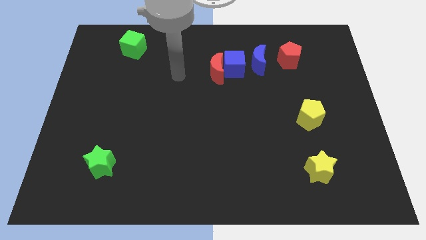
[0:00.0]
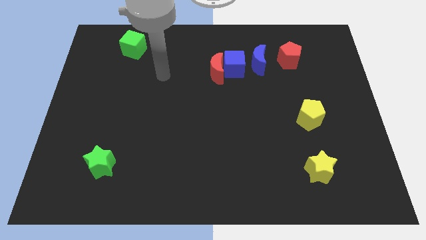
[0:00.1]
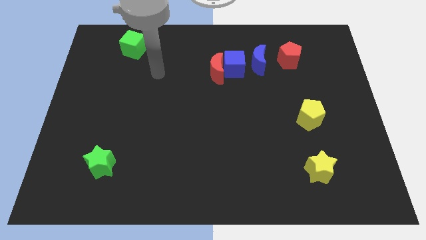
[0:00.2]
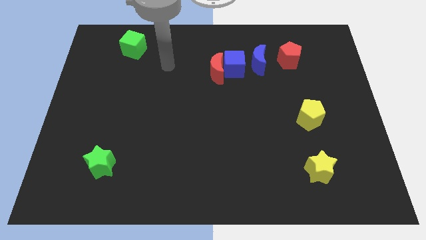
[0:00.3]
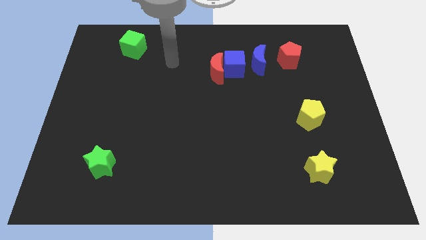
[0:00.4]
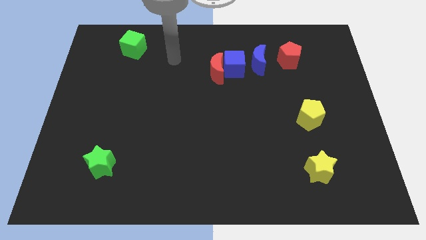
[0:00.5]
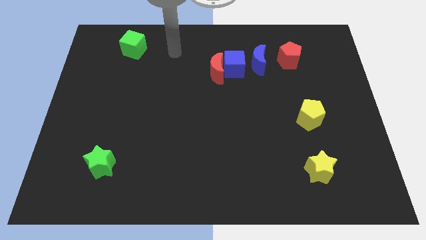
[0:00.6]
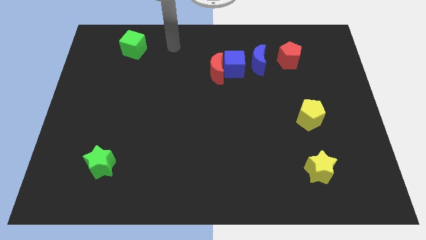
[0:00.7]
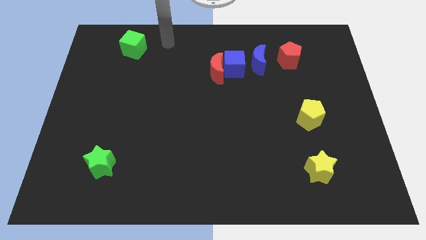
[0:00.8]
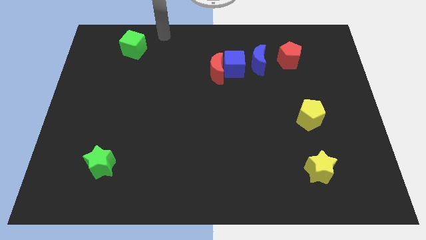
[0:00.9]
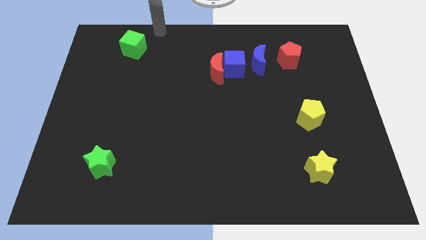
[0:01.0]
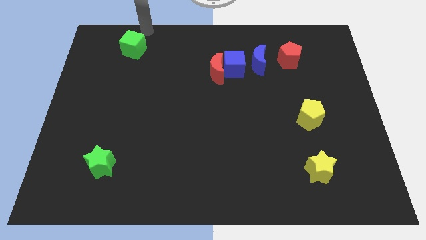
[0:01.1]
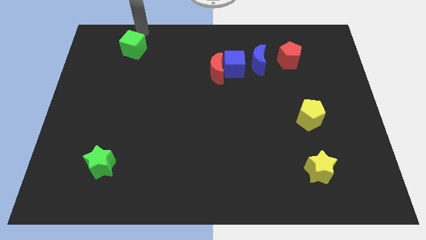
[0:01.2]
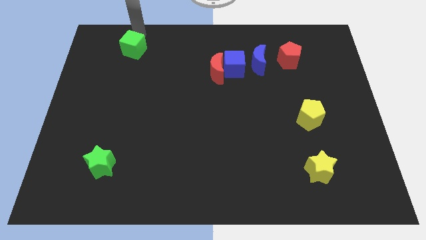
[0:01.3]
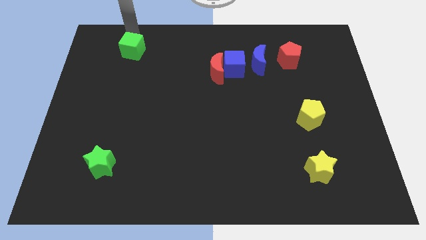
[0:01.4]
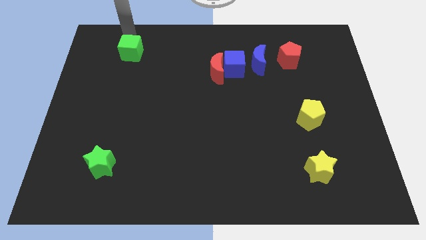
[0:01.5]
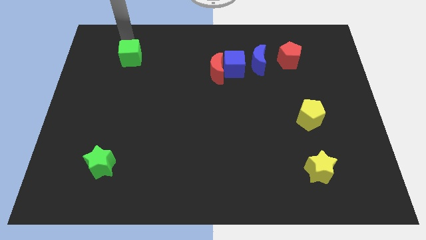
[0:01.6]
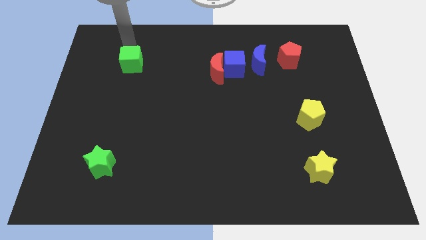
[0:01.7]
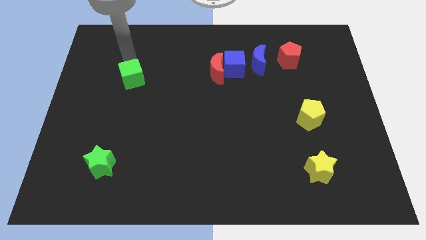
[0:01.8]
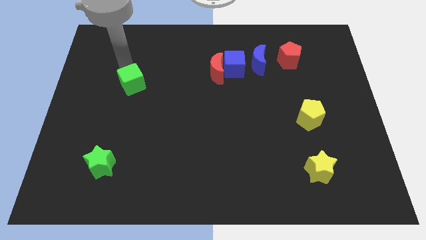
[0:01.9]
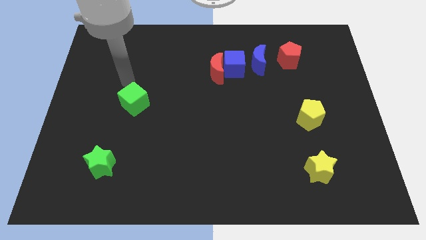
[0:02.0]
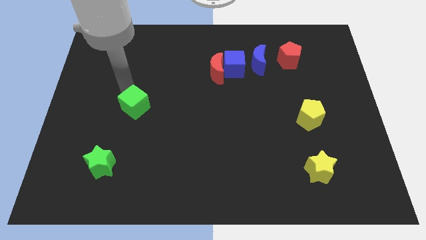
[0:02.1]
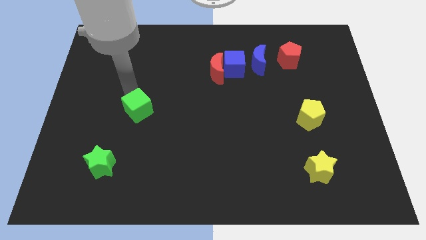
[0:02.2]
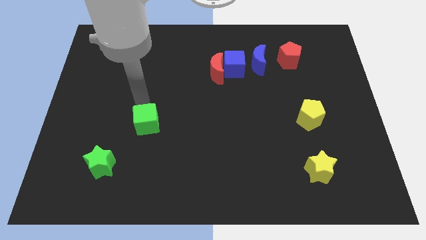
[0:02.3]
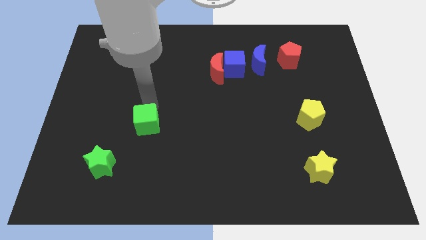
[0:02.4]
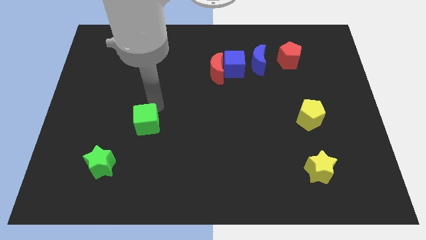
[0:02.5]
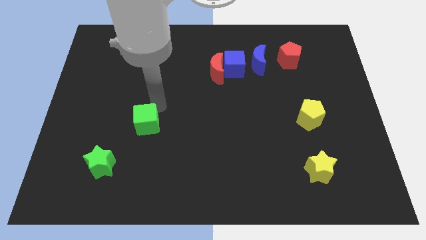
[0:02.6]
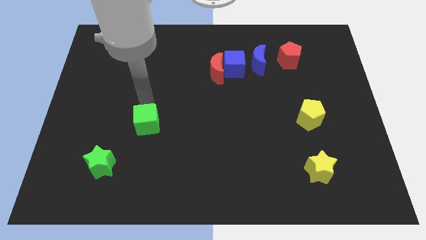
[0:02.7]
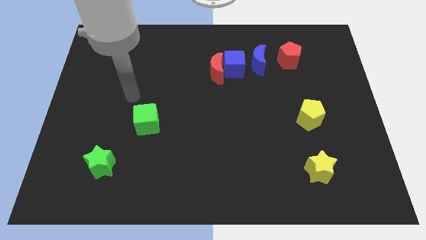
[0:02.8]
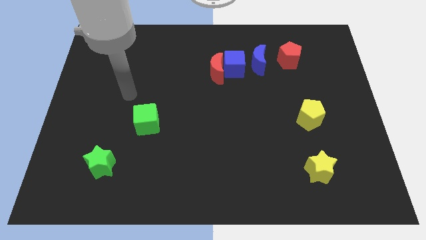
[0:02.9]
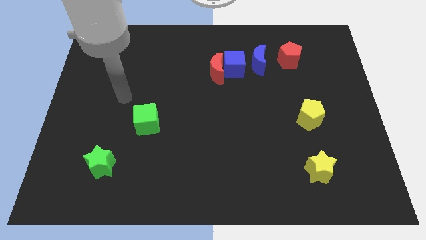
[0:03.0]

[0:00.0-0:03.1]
push the green cube diagonally at the top right side of the green star

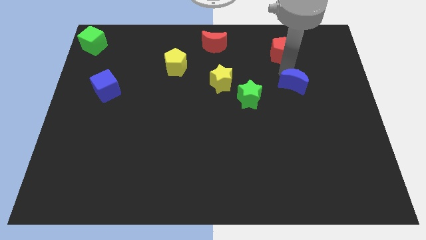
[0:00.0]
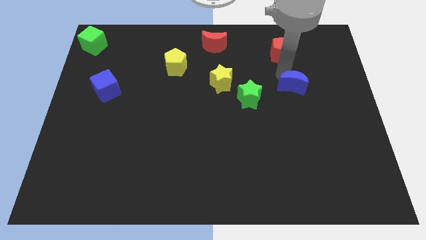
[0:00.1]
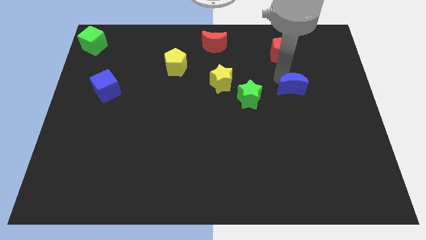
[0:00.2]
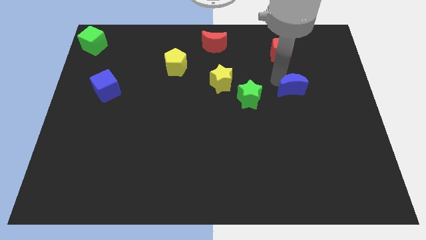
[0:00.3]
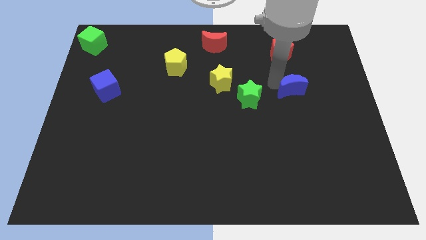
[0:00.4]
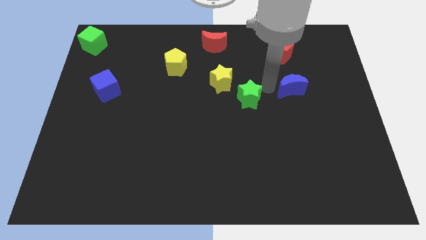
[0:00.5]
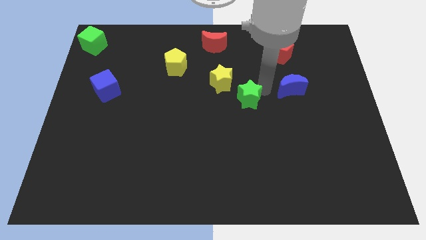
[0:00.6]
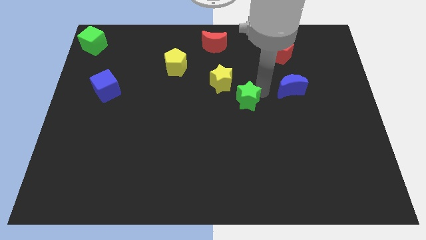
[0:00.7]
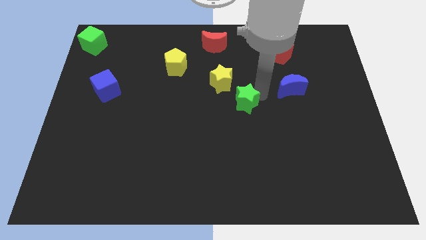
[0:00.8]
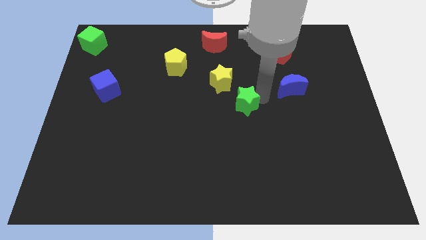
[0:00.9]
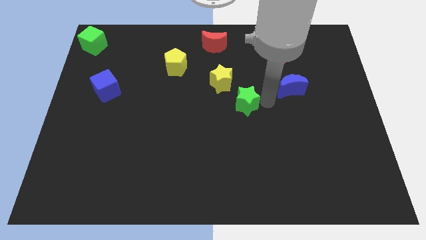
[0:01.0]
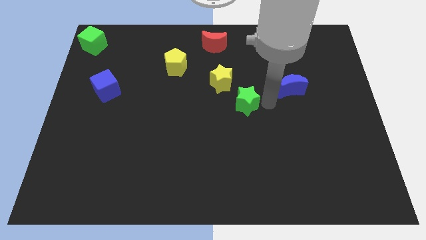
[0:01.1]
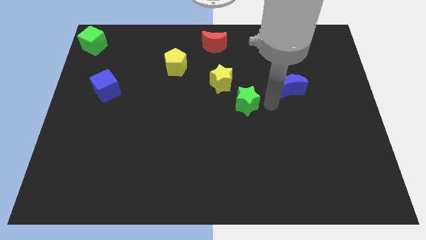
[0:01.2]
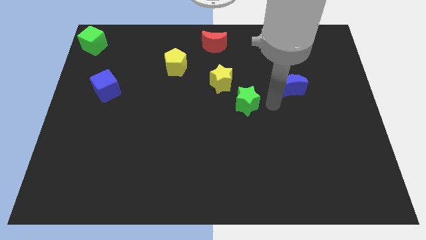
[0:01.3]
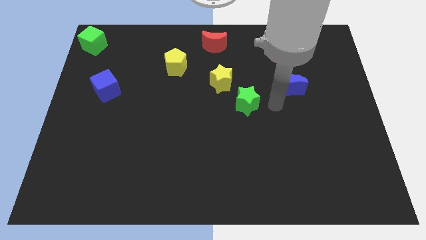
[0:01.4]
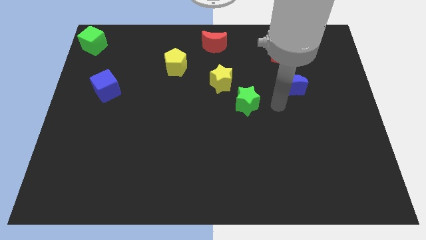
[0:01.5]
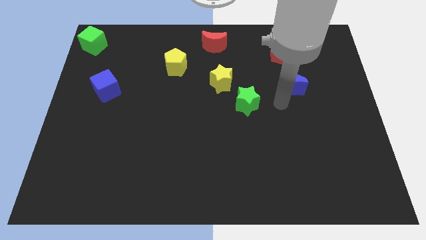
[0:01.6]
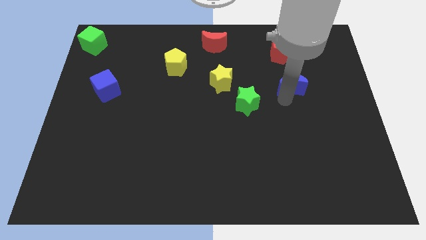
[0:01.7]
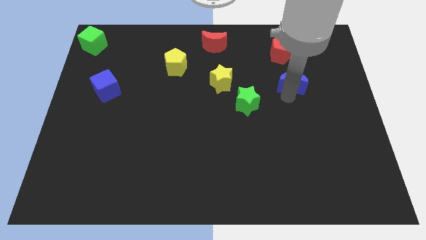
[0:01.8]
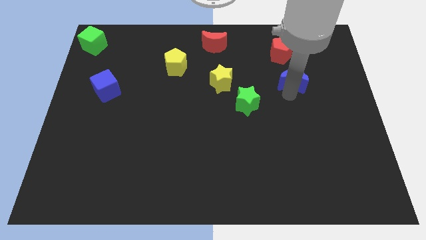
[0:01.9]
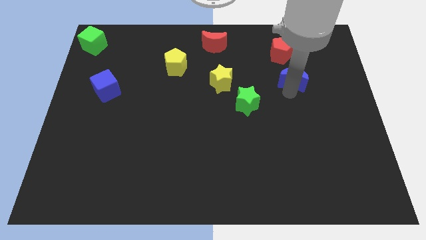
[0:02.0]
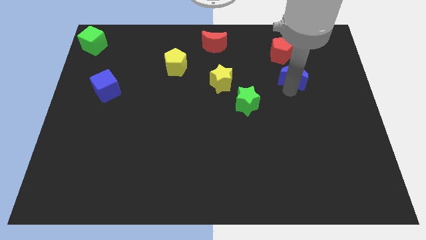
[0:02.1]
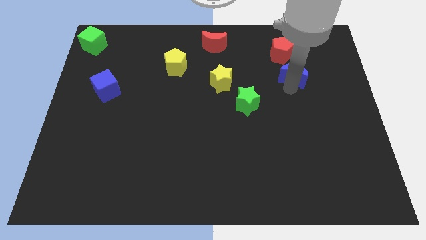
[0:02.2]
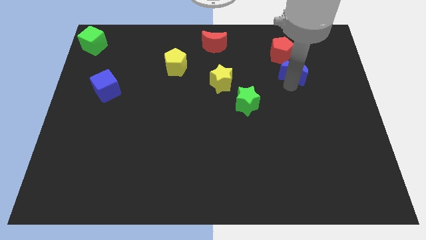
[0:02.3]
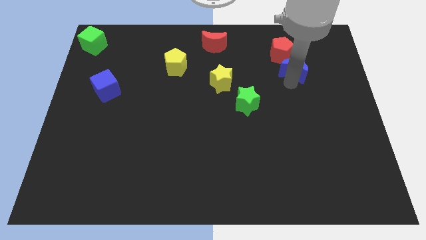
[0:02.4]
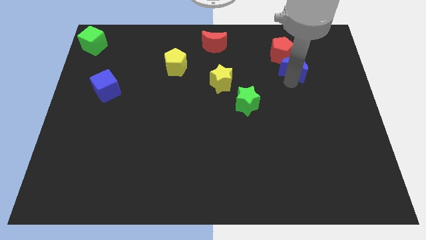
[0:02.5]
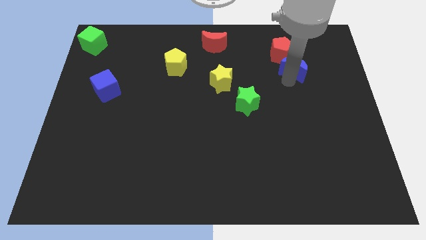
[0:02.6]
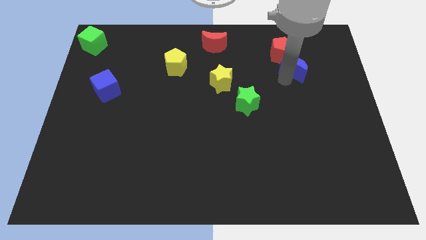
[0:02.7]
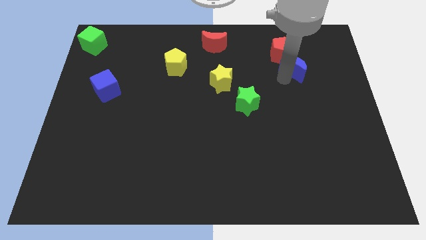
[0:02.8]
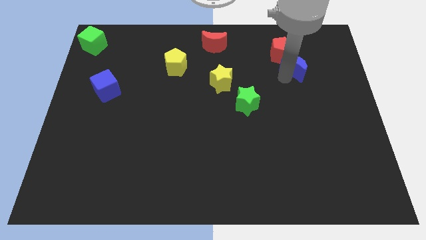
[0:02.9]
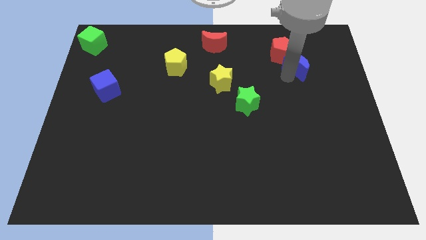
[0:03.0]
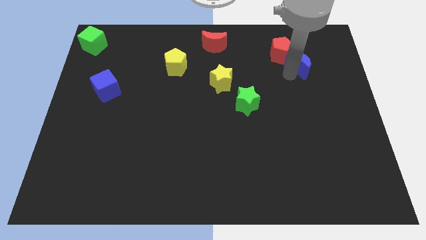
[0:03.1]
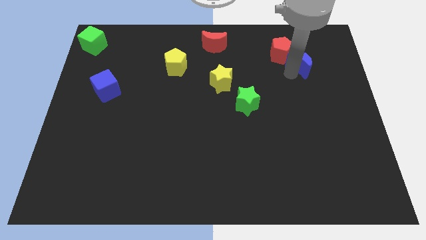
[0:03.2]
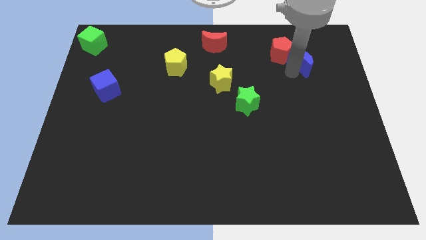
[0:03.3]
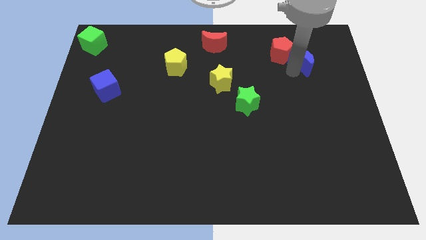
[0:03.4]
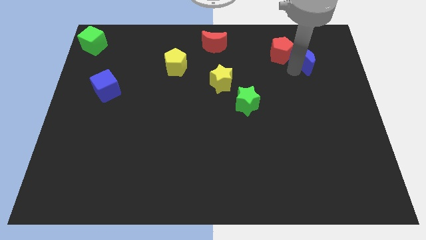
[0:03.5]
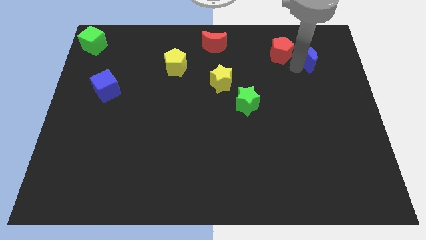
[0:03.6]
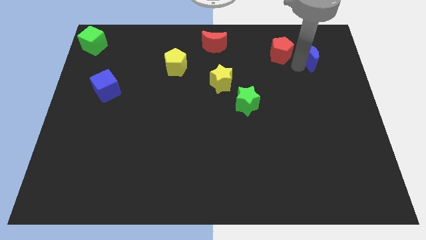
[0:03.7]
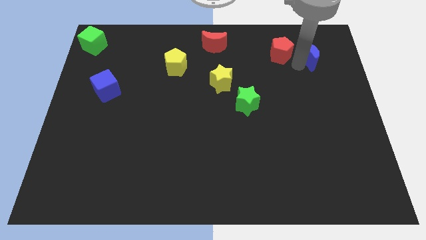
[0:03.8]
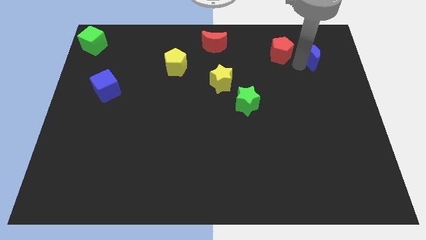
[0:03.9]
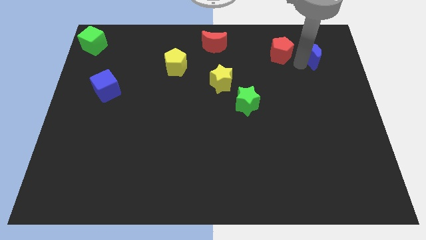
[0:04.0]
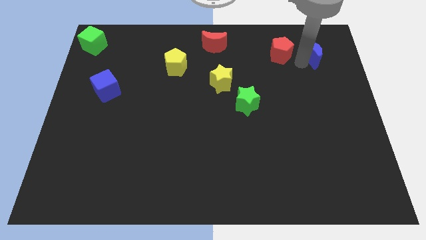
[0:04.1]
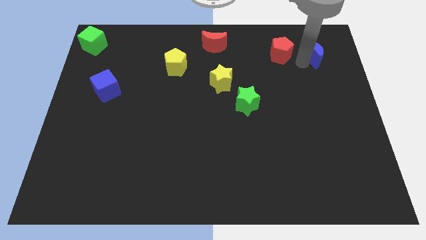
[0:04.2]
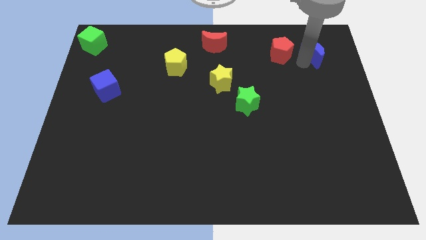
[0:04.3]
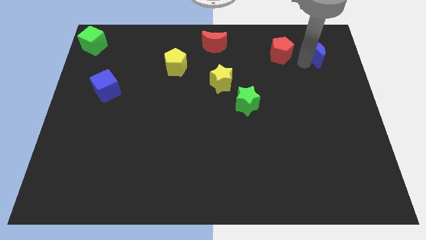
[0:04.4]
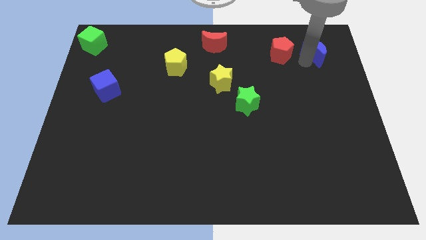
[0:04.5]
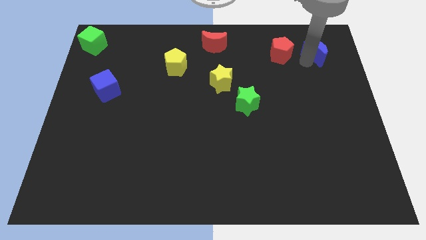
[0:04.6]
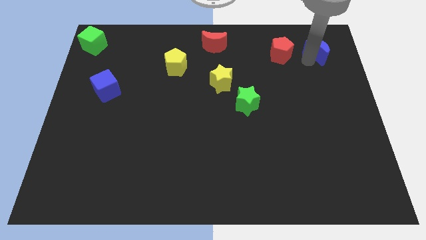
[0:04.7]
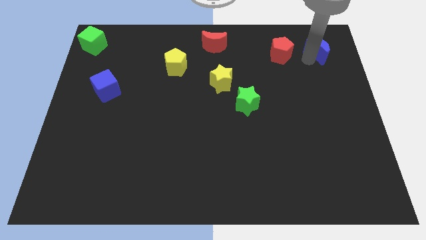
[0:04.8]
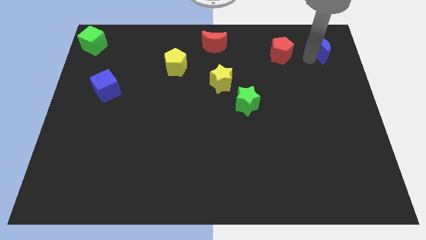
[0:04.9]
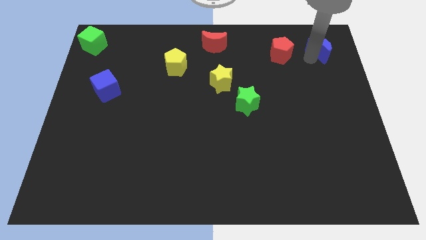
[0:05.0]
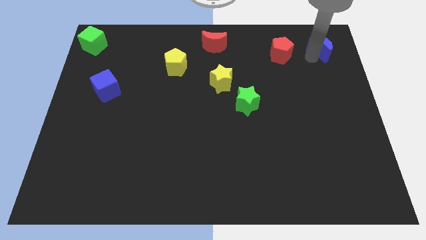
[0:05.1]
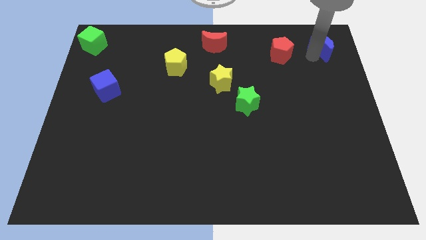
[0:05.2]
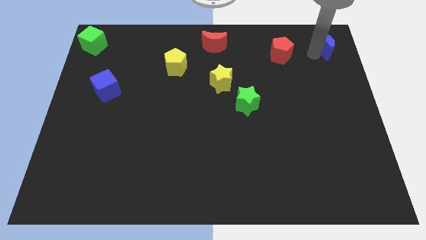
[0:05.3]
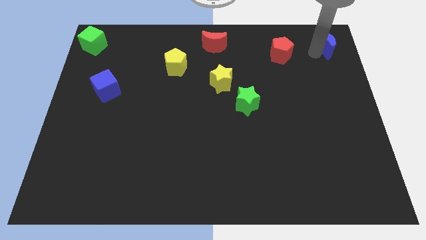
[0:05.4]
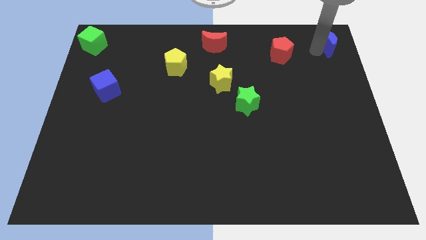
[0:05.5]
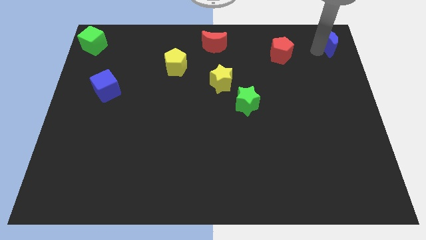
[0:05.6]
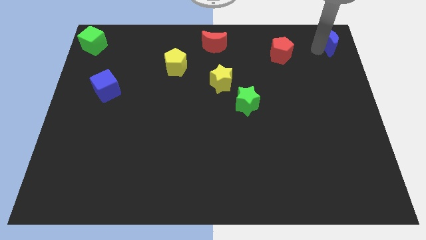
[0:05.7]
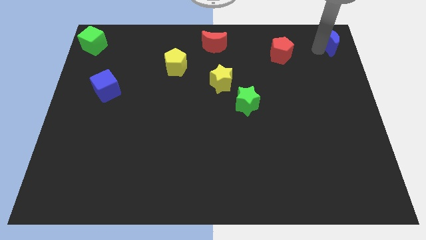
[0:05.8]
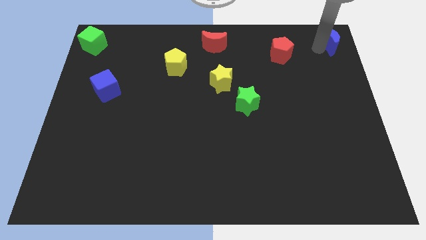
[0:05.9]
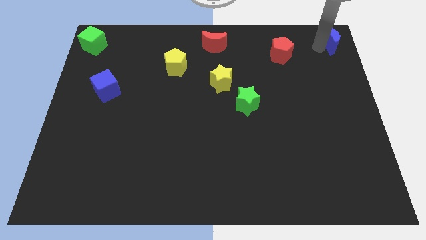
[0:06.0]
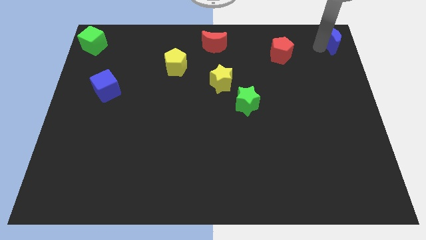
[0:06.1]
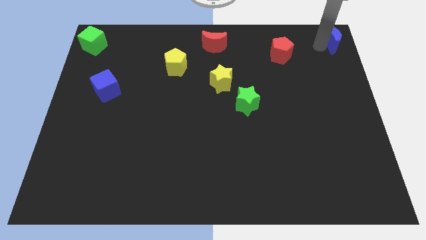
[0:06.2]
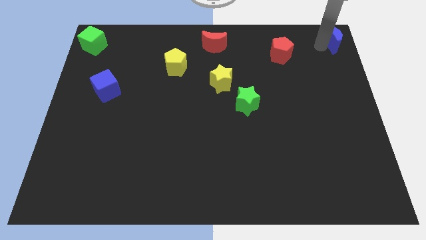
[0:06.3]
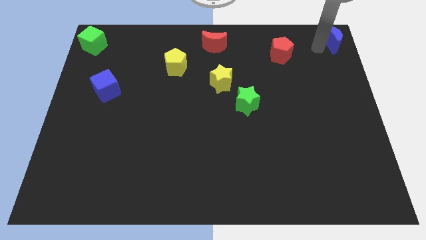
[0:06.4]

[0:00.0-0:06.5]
move the blue cube to the top right of the table
